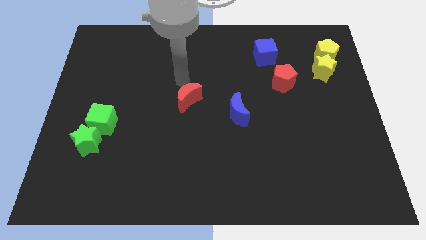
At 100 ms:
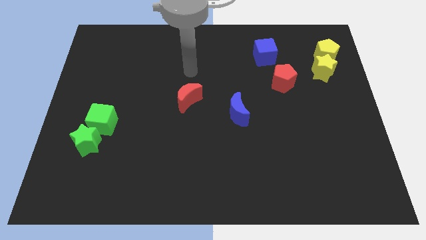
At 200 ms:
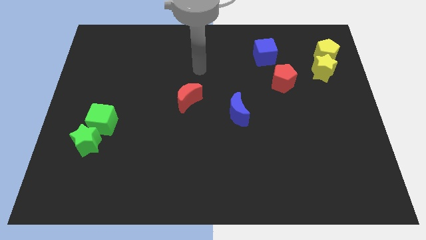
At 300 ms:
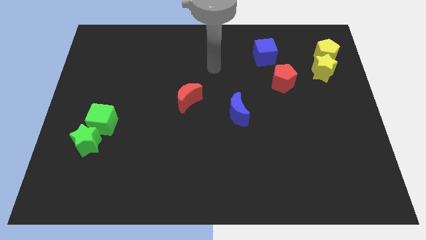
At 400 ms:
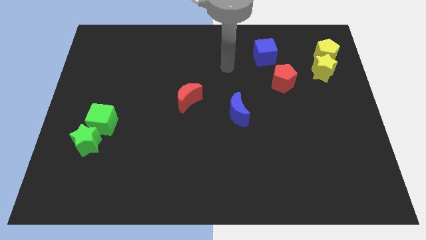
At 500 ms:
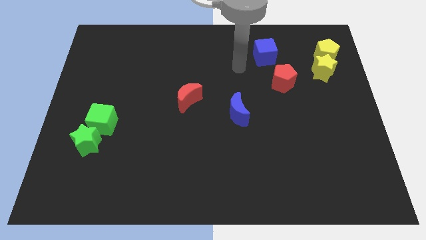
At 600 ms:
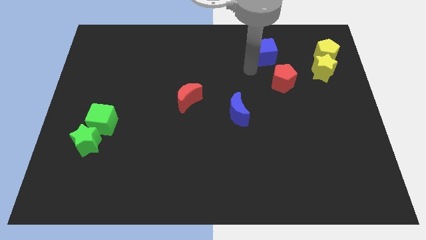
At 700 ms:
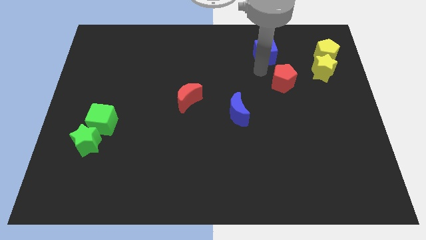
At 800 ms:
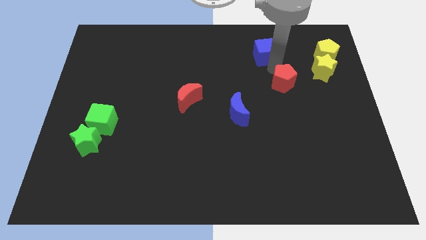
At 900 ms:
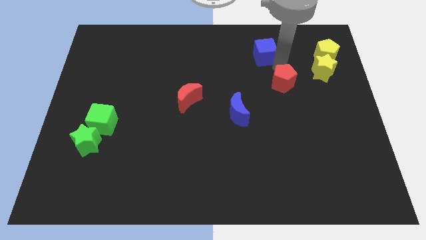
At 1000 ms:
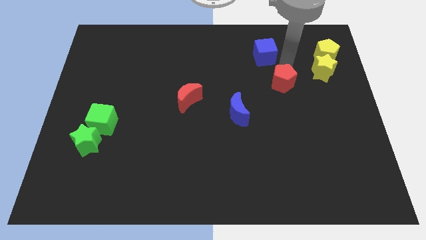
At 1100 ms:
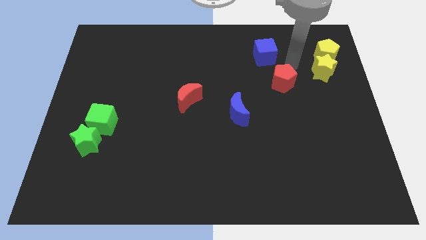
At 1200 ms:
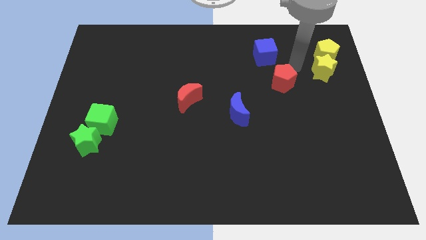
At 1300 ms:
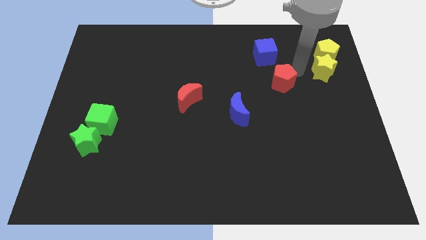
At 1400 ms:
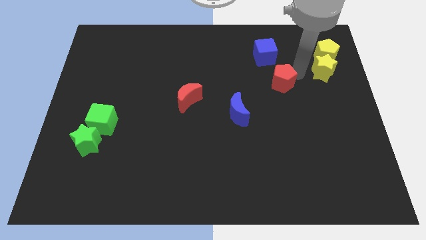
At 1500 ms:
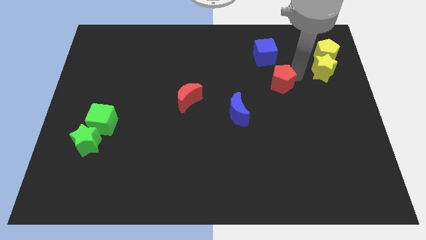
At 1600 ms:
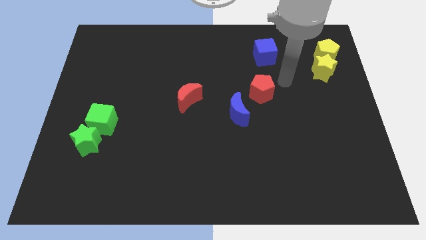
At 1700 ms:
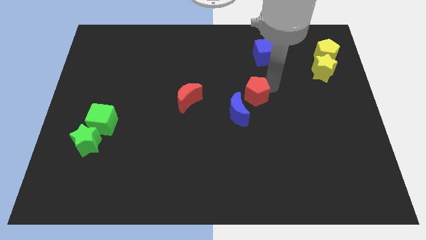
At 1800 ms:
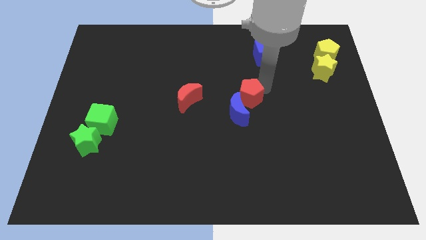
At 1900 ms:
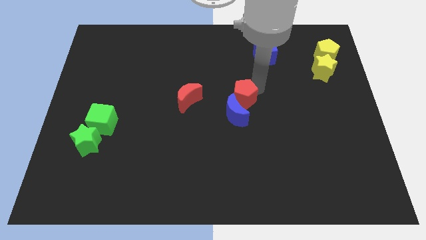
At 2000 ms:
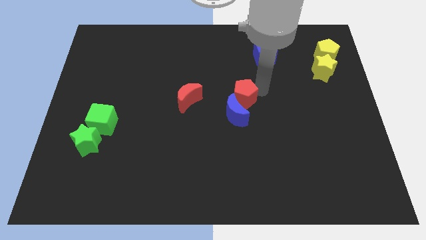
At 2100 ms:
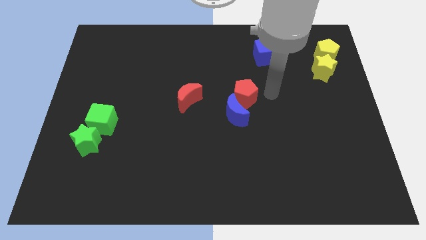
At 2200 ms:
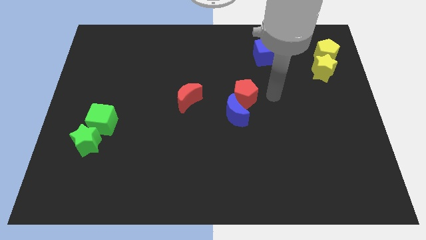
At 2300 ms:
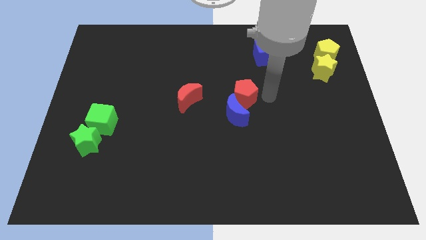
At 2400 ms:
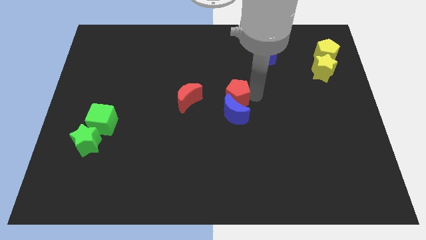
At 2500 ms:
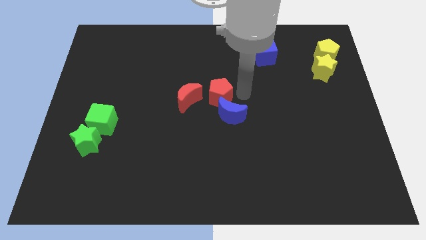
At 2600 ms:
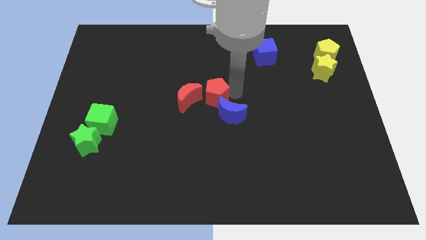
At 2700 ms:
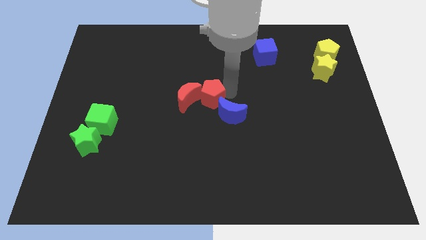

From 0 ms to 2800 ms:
push the red pentagon to the right of the red crescent

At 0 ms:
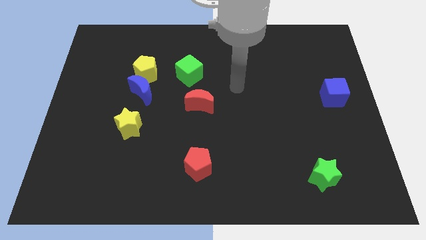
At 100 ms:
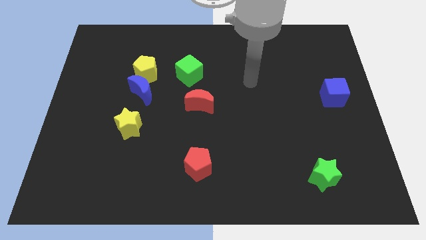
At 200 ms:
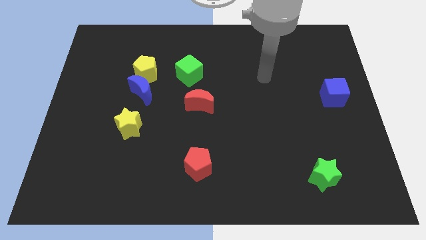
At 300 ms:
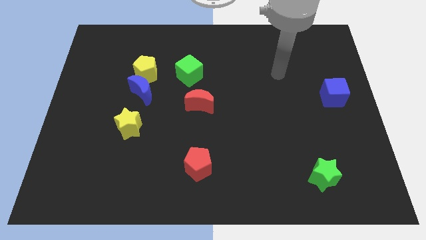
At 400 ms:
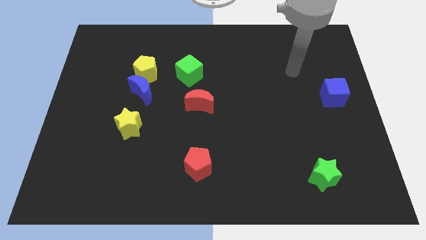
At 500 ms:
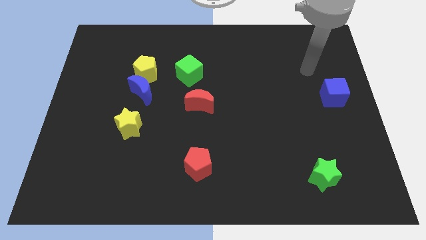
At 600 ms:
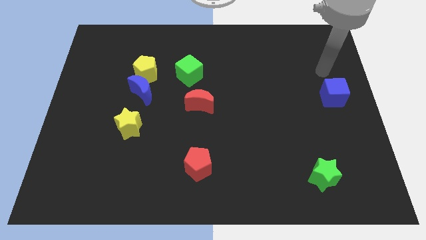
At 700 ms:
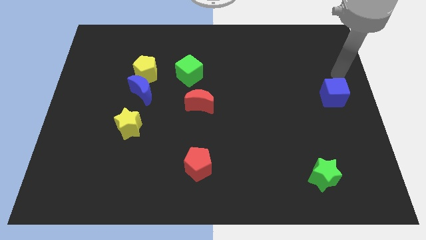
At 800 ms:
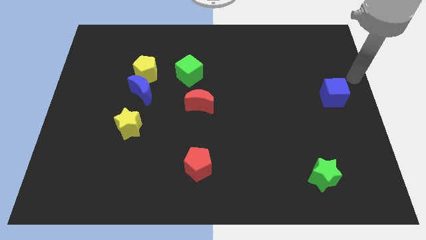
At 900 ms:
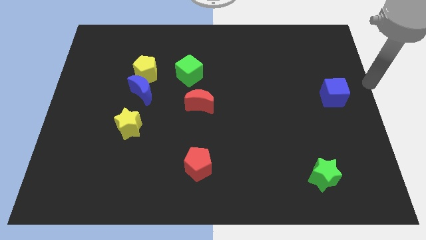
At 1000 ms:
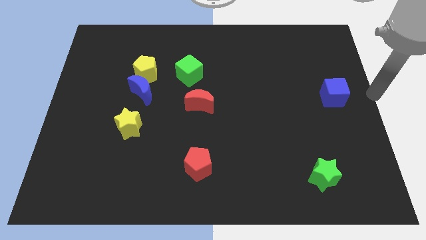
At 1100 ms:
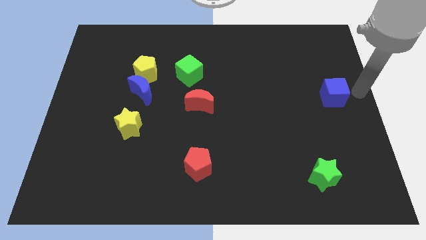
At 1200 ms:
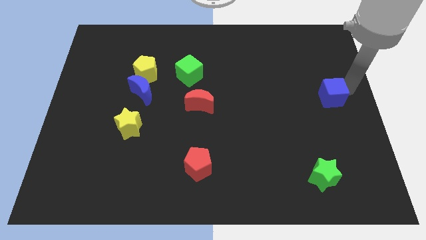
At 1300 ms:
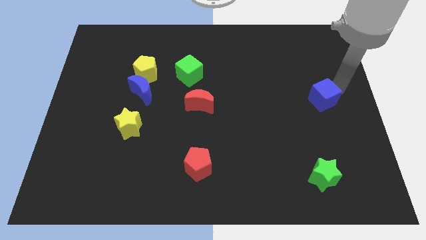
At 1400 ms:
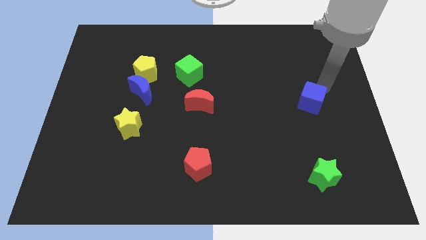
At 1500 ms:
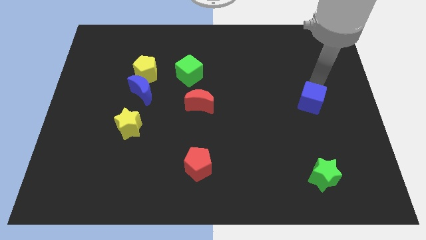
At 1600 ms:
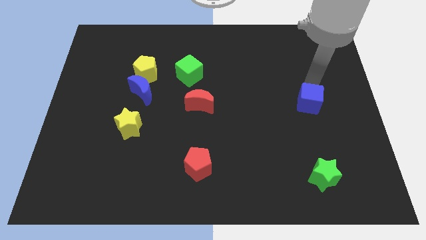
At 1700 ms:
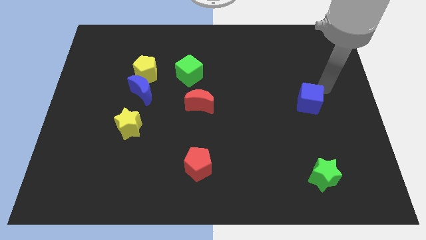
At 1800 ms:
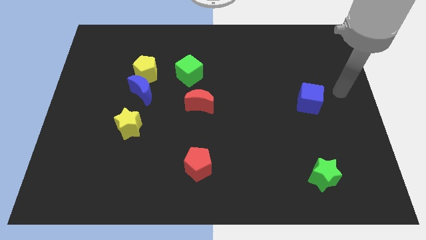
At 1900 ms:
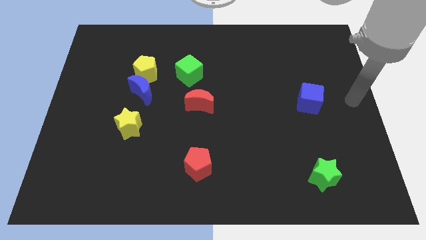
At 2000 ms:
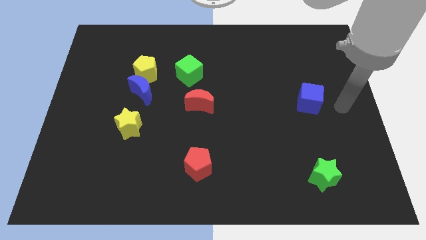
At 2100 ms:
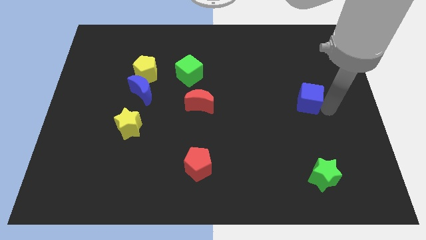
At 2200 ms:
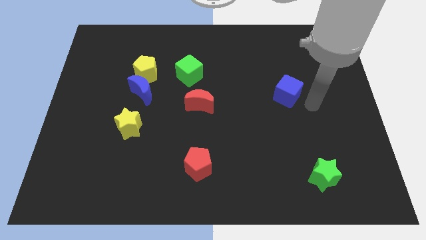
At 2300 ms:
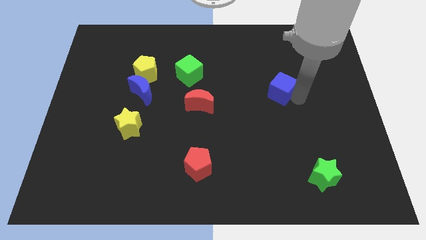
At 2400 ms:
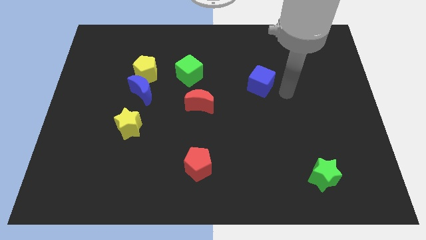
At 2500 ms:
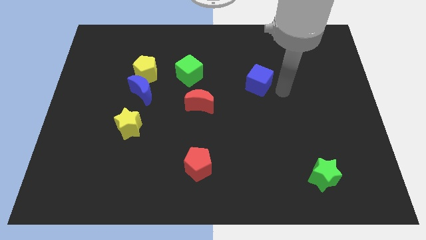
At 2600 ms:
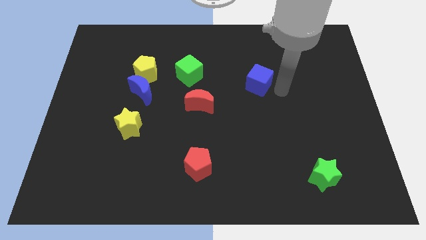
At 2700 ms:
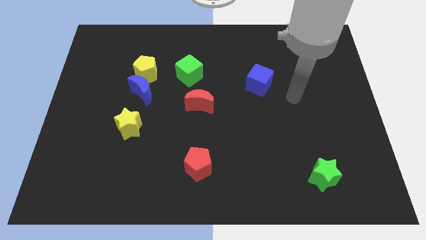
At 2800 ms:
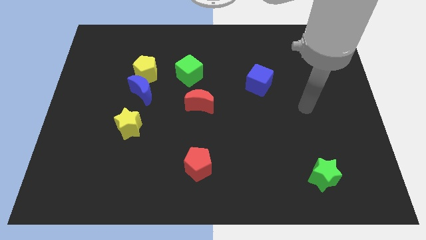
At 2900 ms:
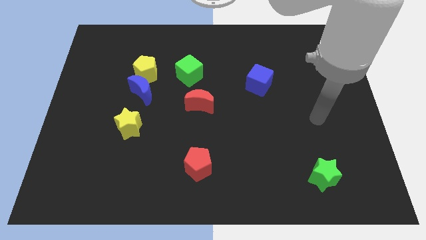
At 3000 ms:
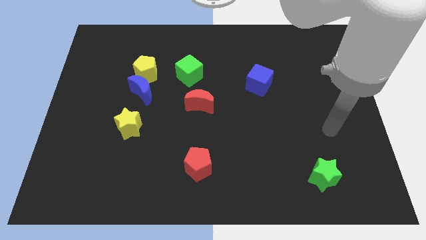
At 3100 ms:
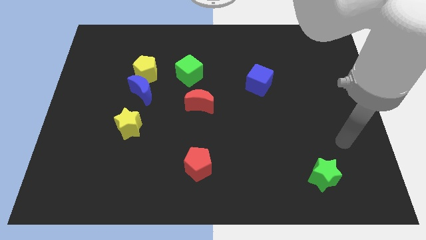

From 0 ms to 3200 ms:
move the blue cube towards the right side of the green cube

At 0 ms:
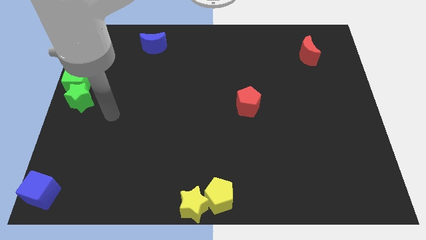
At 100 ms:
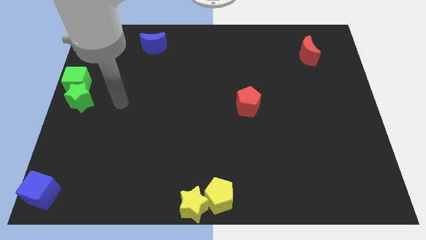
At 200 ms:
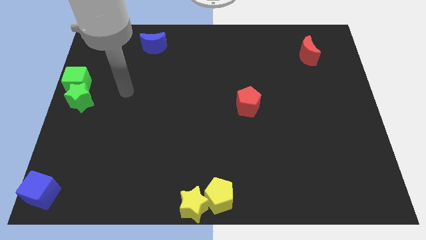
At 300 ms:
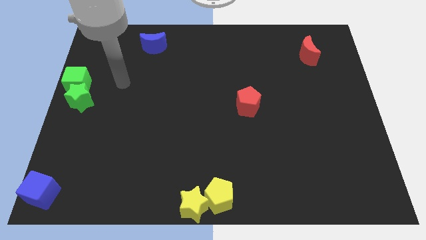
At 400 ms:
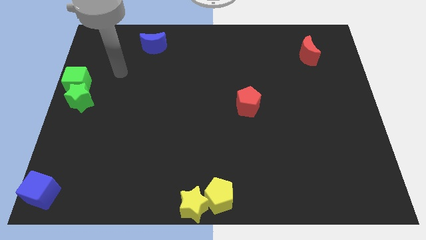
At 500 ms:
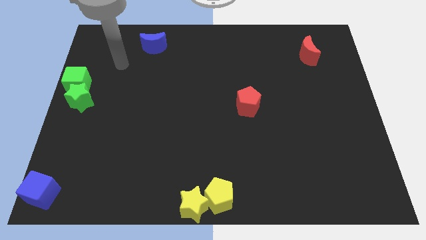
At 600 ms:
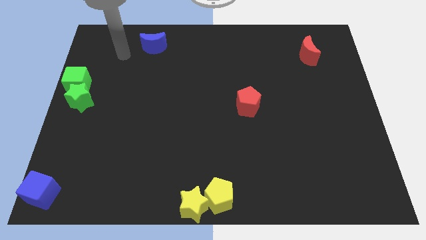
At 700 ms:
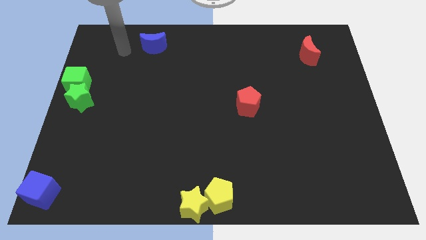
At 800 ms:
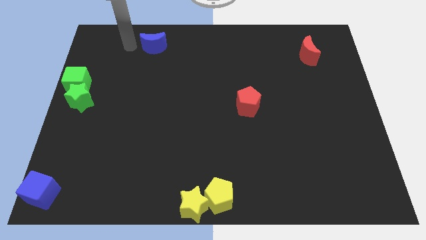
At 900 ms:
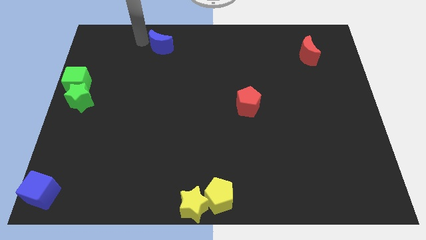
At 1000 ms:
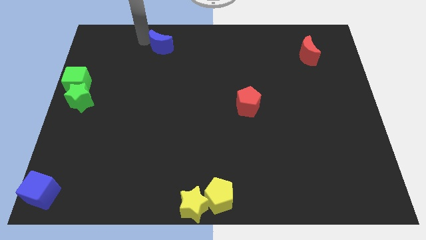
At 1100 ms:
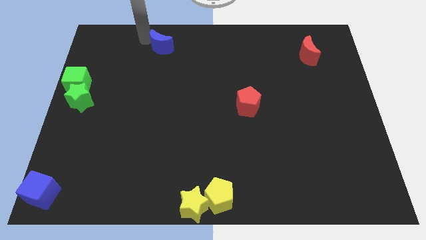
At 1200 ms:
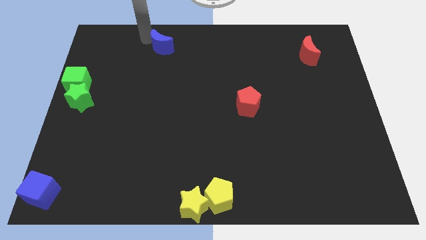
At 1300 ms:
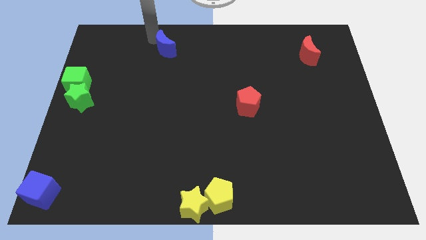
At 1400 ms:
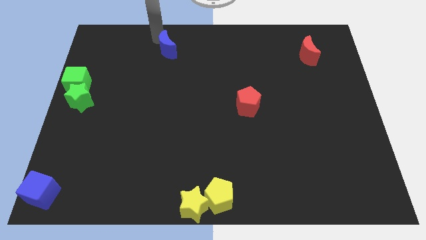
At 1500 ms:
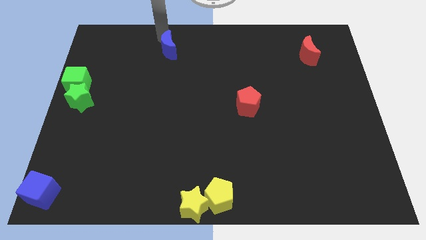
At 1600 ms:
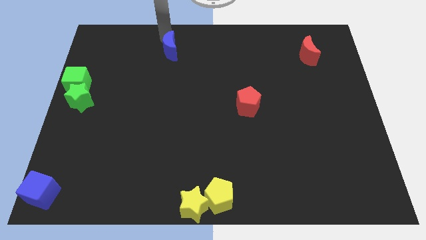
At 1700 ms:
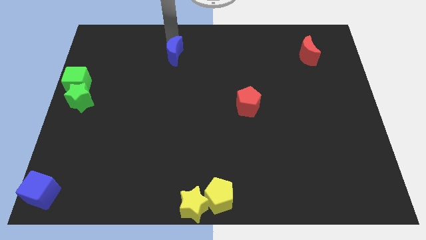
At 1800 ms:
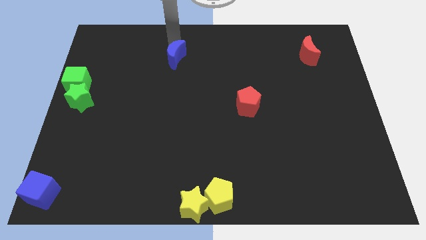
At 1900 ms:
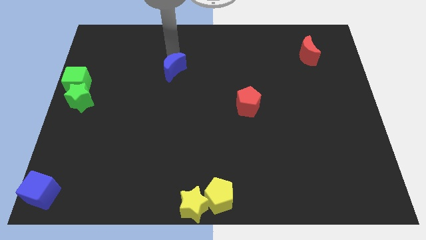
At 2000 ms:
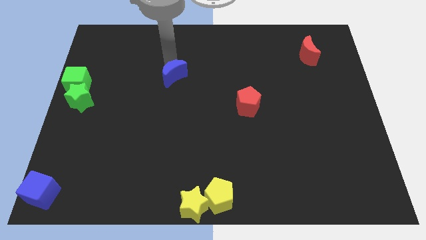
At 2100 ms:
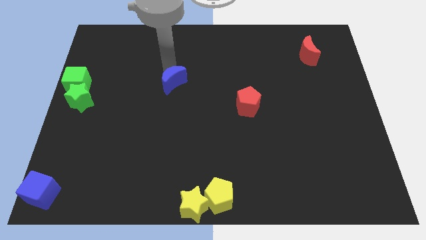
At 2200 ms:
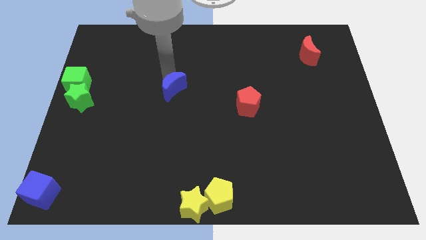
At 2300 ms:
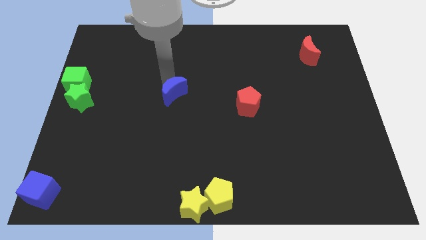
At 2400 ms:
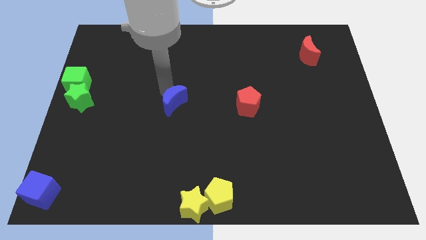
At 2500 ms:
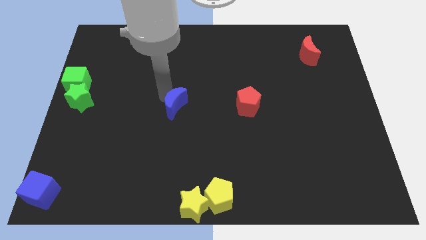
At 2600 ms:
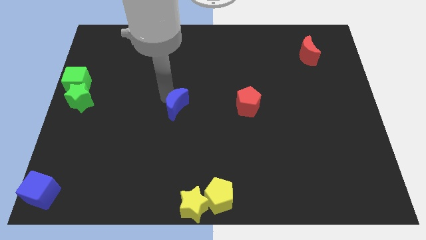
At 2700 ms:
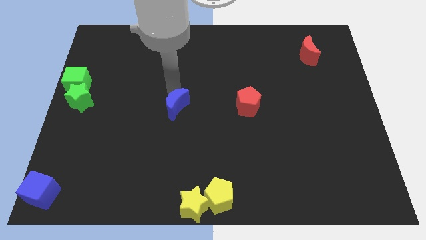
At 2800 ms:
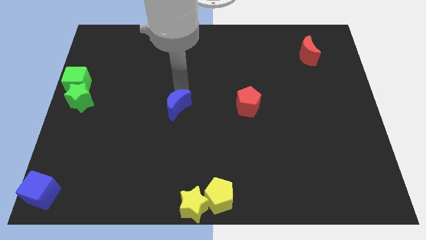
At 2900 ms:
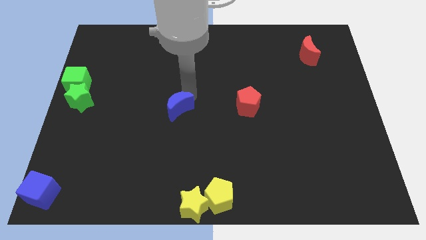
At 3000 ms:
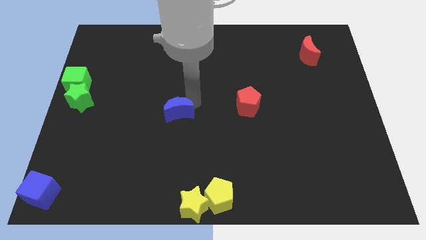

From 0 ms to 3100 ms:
push the blue crescent towards the bottom
